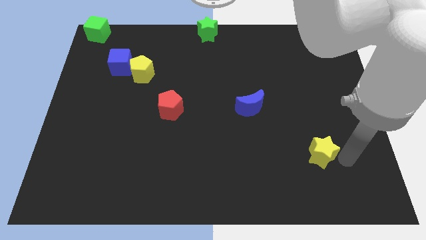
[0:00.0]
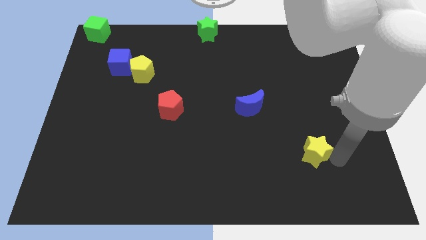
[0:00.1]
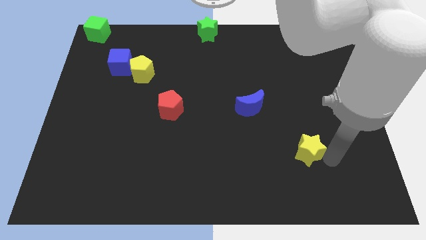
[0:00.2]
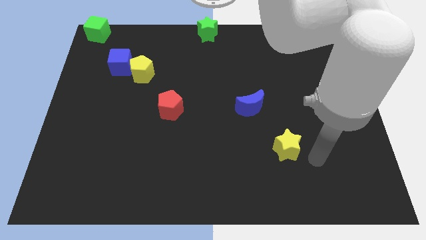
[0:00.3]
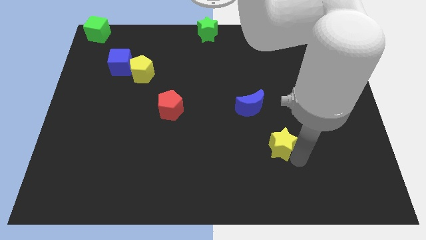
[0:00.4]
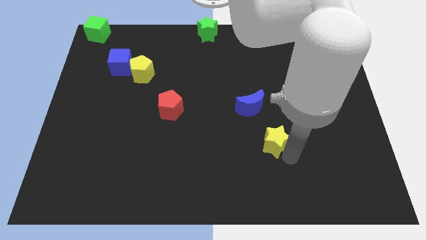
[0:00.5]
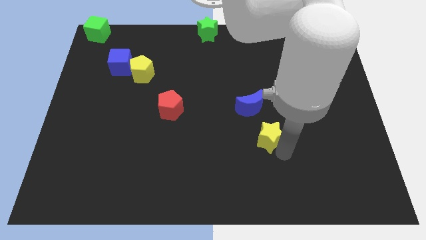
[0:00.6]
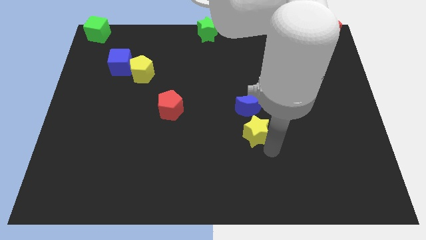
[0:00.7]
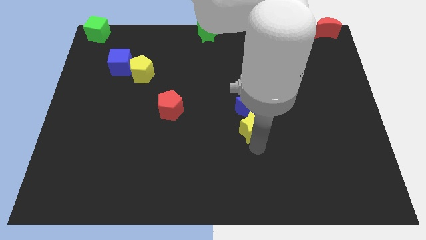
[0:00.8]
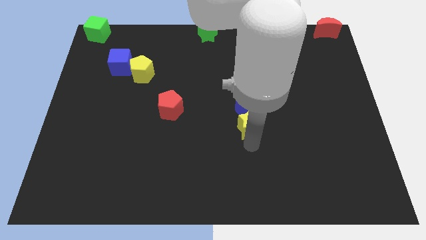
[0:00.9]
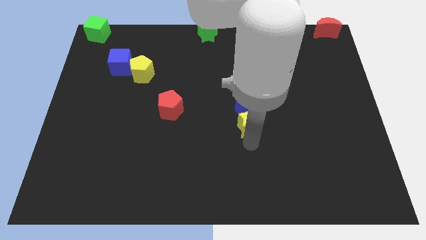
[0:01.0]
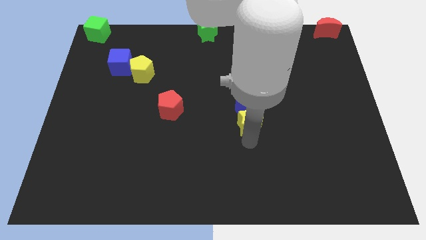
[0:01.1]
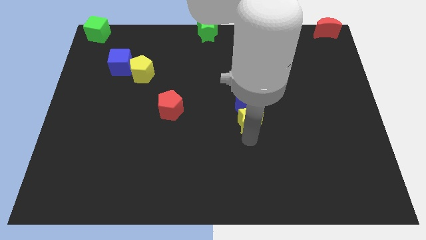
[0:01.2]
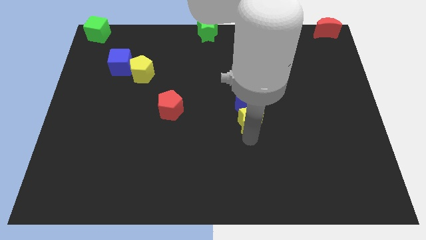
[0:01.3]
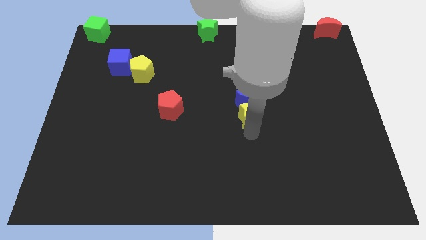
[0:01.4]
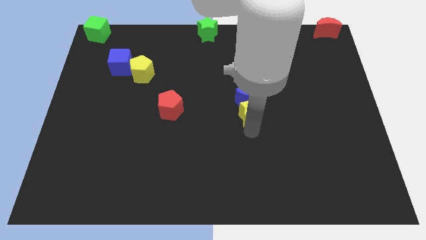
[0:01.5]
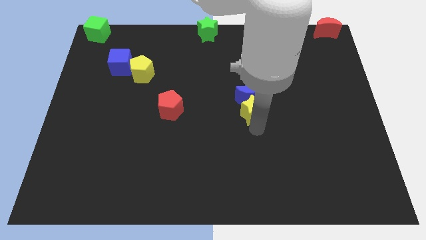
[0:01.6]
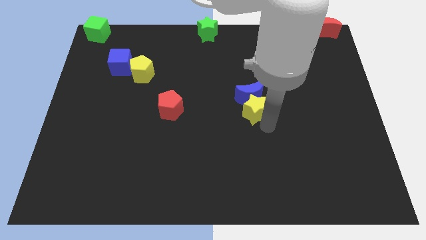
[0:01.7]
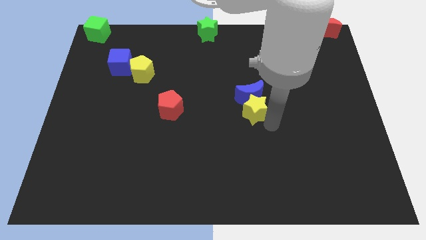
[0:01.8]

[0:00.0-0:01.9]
push the yellow star into the blue moon

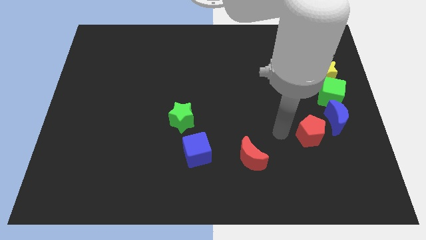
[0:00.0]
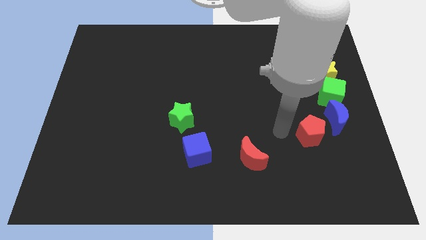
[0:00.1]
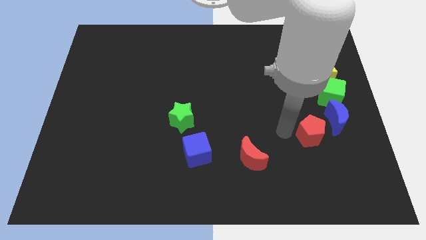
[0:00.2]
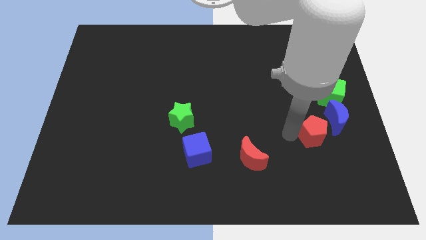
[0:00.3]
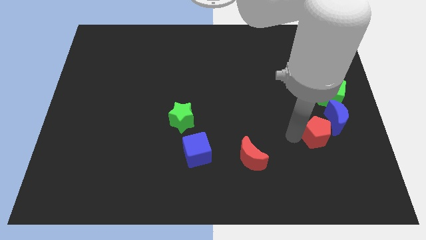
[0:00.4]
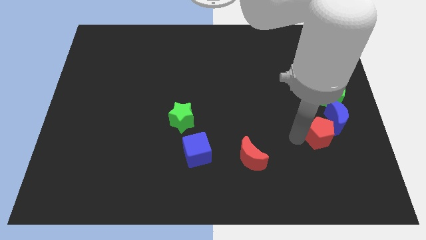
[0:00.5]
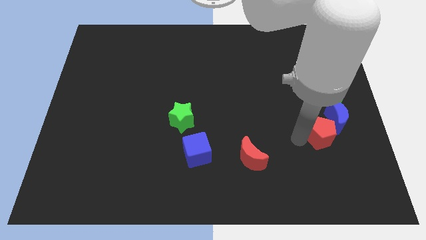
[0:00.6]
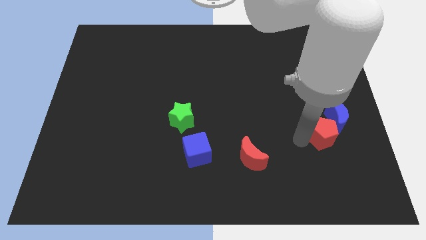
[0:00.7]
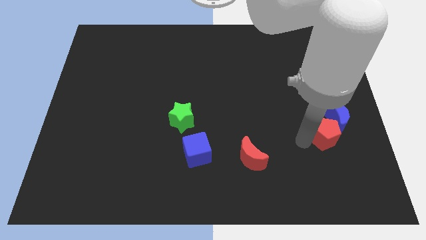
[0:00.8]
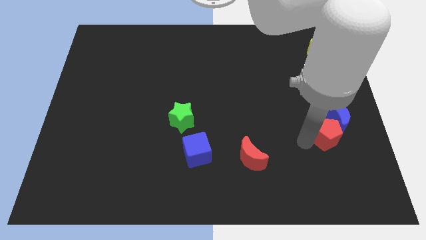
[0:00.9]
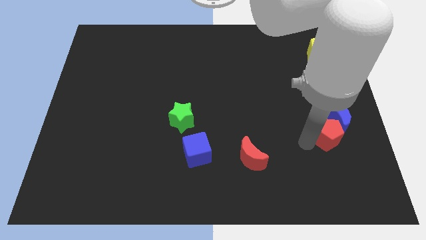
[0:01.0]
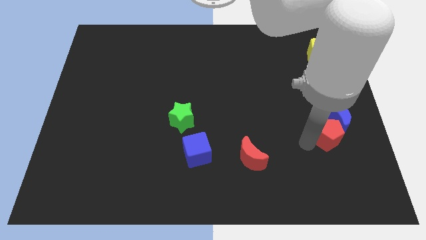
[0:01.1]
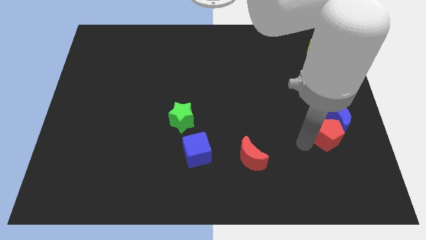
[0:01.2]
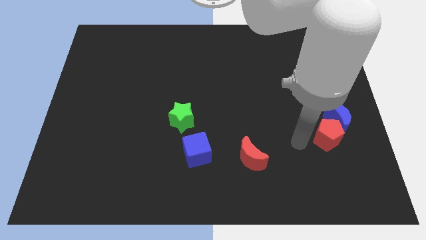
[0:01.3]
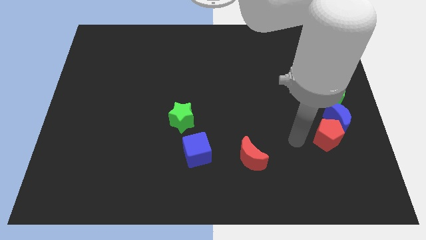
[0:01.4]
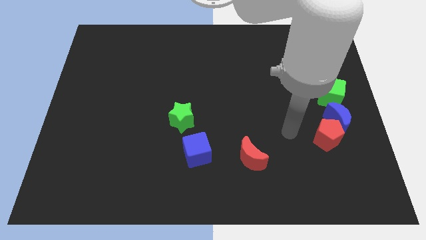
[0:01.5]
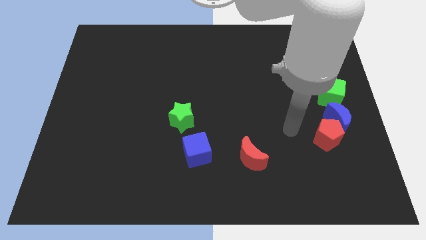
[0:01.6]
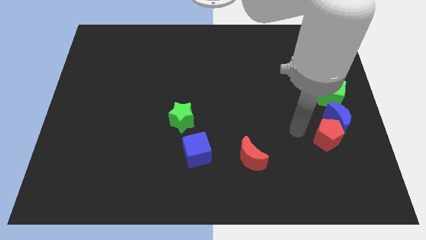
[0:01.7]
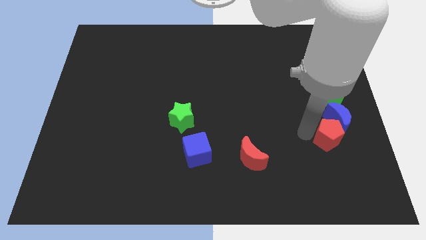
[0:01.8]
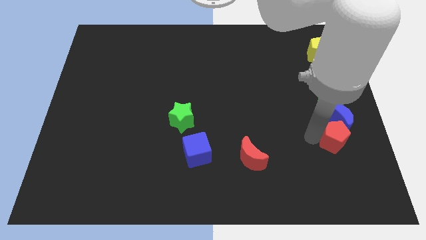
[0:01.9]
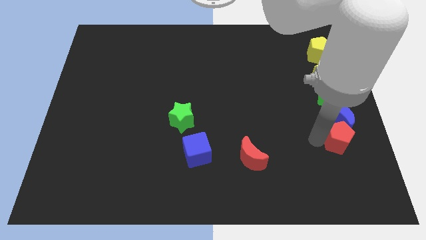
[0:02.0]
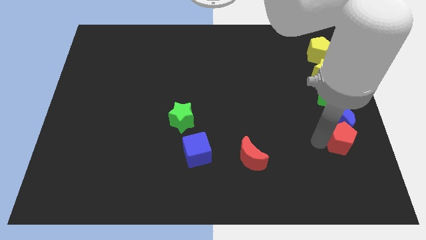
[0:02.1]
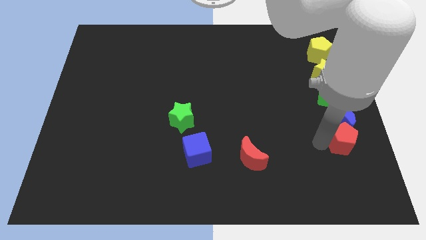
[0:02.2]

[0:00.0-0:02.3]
place the red pentagon below the blue moon

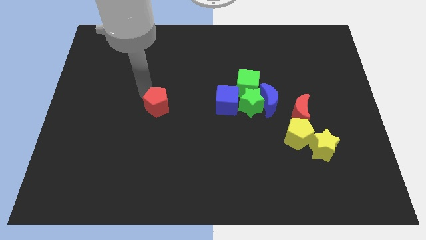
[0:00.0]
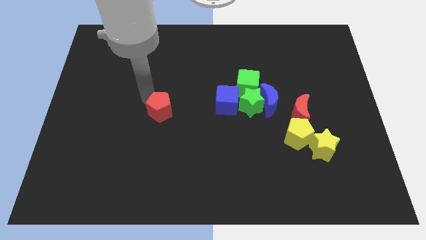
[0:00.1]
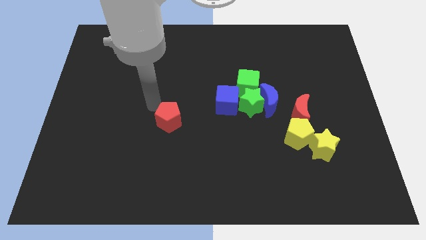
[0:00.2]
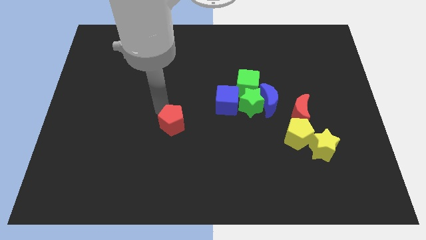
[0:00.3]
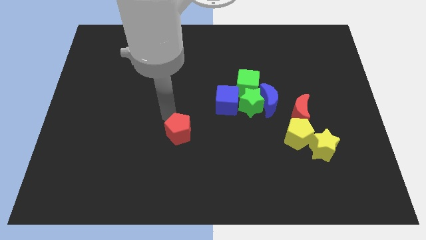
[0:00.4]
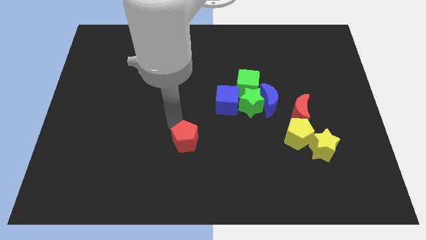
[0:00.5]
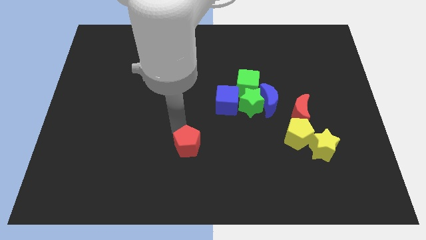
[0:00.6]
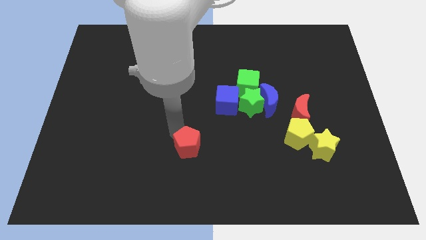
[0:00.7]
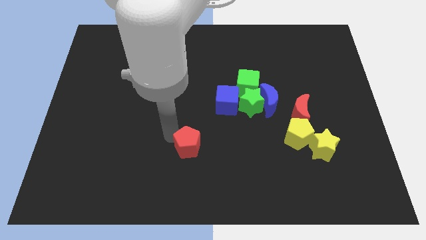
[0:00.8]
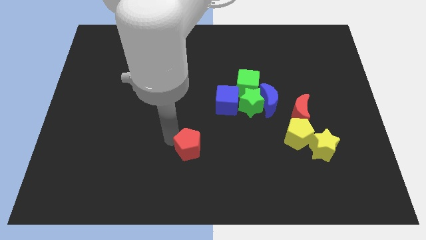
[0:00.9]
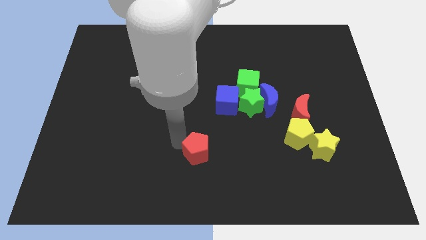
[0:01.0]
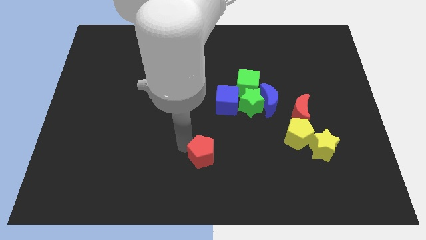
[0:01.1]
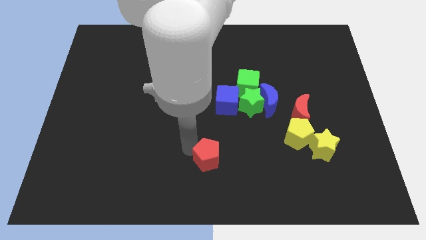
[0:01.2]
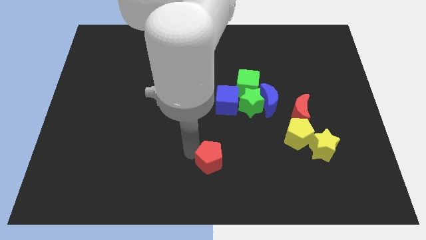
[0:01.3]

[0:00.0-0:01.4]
push the red pentagon diagonally bottom left of the green star

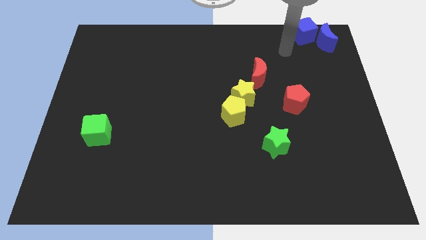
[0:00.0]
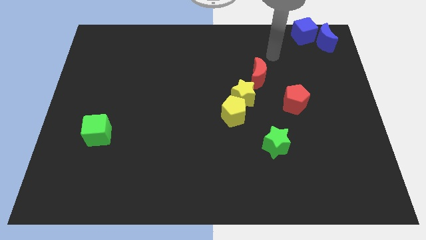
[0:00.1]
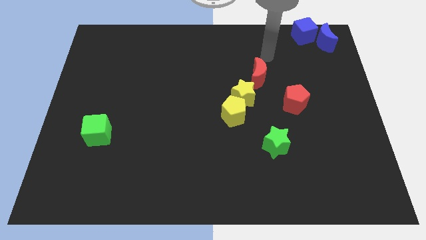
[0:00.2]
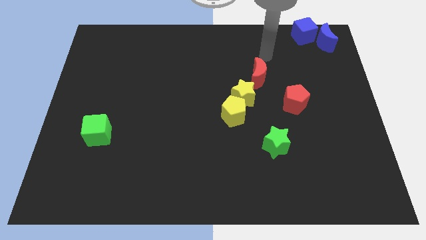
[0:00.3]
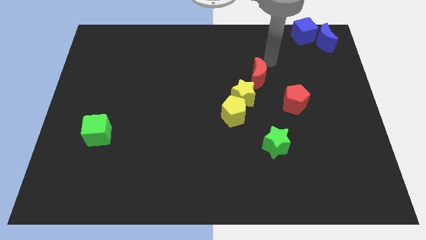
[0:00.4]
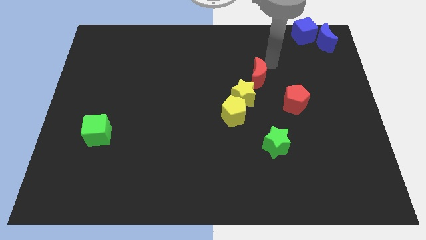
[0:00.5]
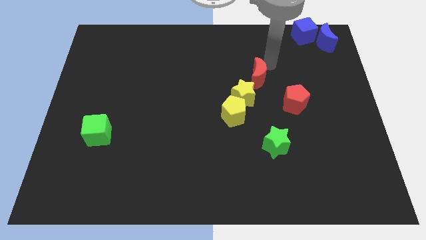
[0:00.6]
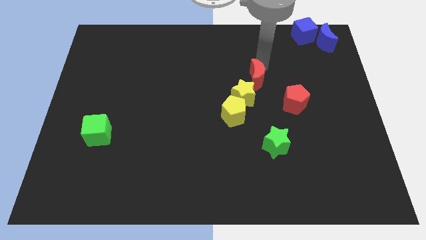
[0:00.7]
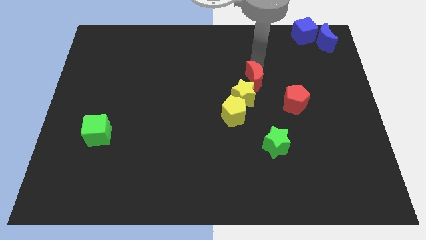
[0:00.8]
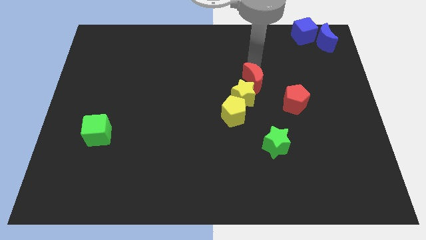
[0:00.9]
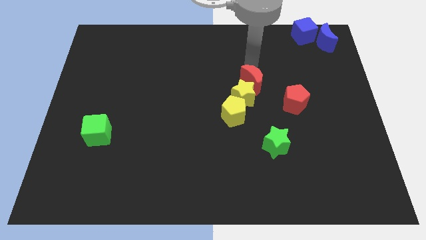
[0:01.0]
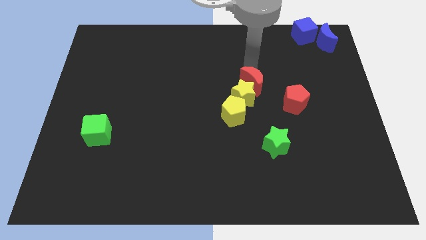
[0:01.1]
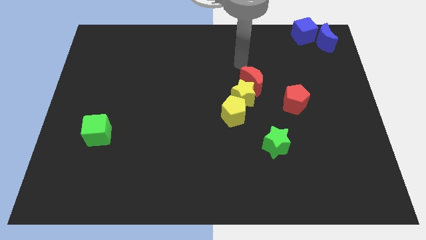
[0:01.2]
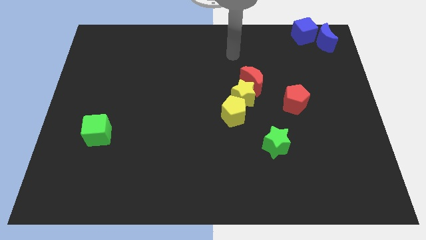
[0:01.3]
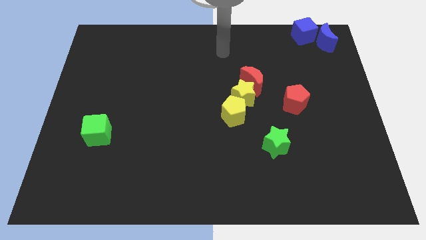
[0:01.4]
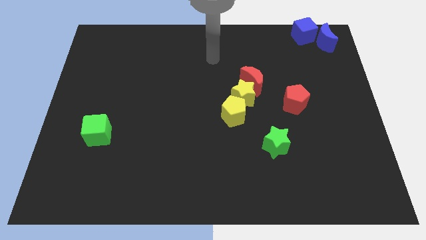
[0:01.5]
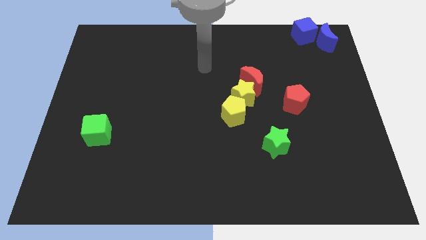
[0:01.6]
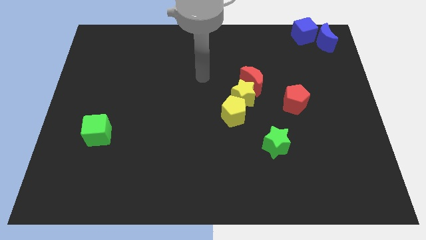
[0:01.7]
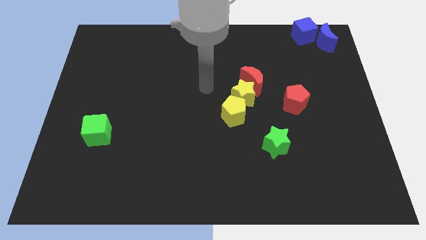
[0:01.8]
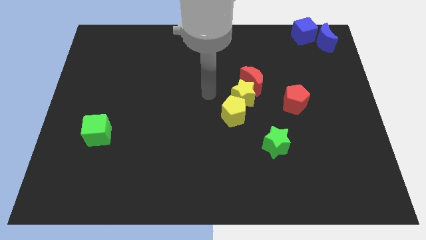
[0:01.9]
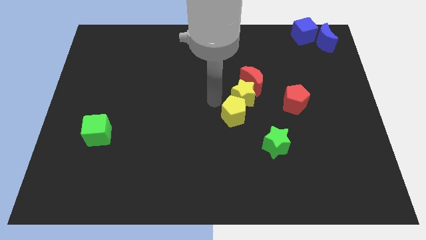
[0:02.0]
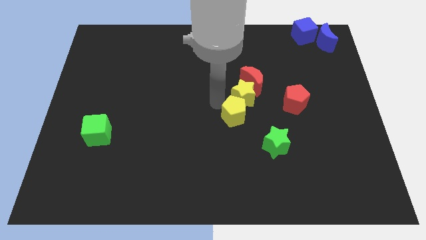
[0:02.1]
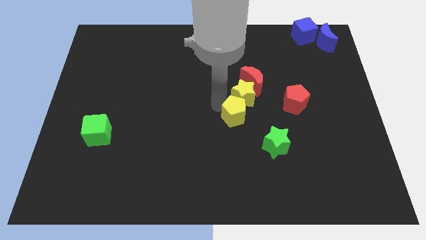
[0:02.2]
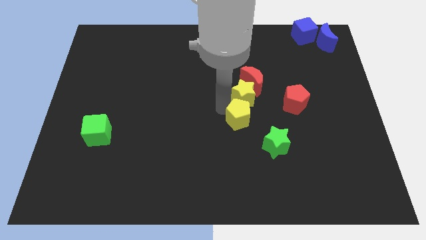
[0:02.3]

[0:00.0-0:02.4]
drag your arm towards yellow pentagon left

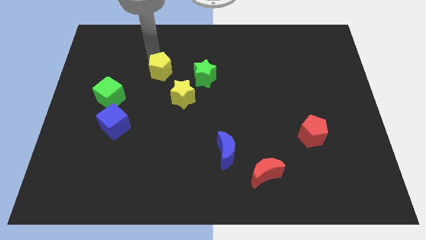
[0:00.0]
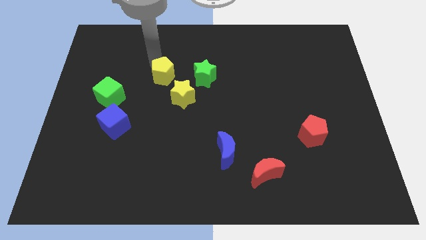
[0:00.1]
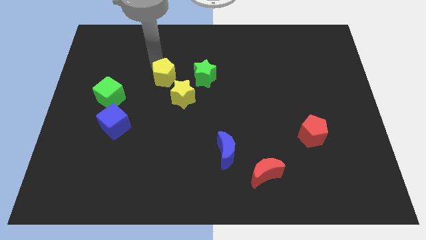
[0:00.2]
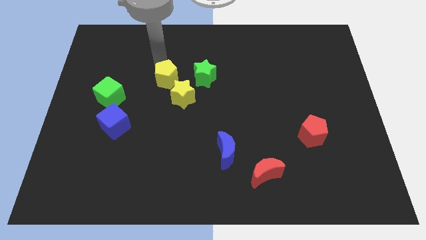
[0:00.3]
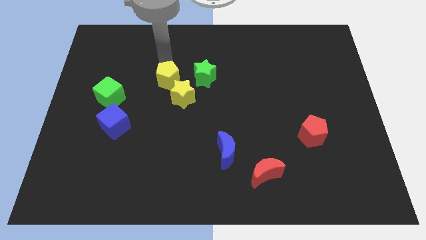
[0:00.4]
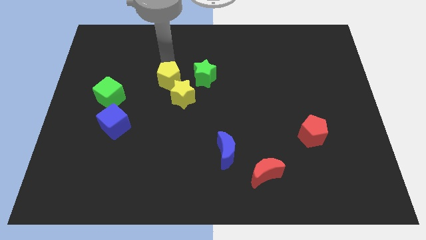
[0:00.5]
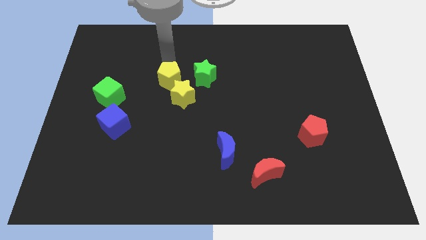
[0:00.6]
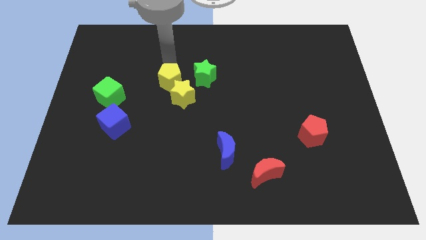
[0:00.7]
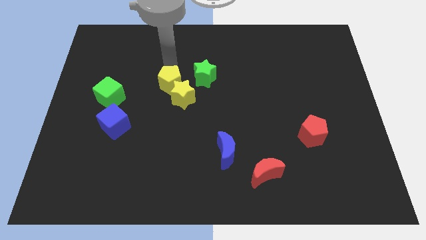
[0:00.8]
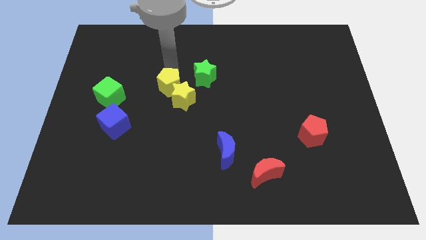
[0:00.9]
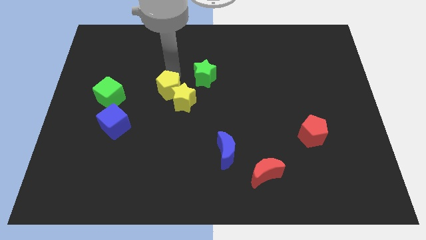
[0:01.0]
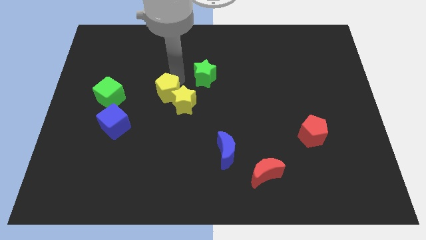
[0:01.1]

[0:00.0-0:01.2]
push the yellow pentagon into the yellow star
